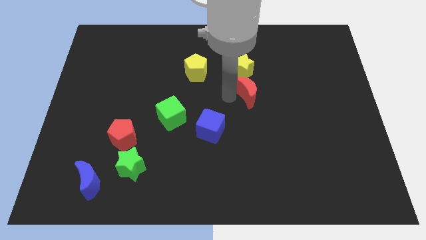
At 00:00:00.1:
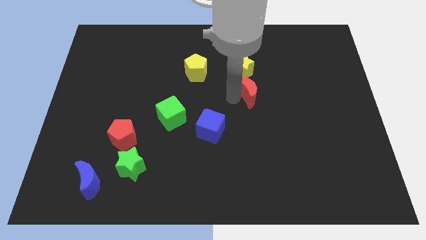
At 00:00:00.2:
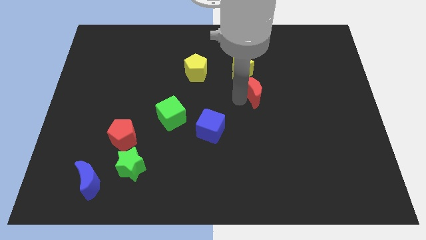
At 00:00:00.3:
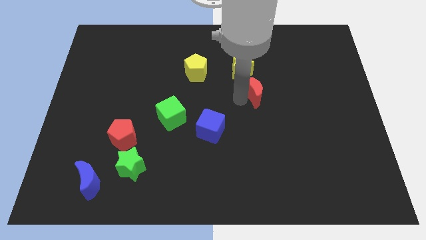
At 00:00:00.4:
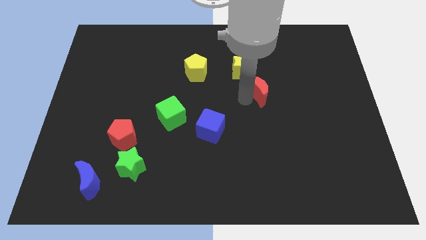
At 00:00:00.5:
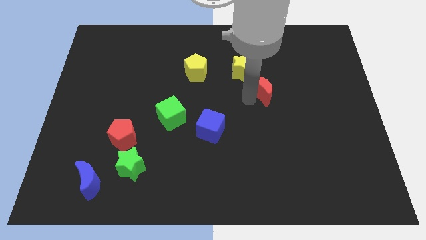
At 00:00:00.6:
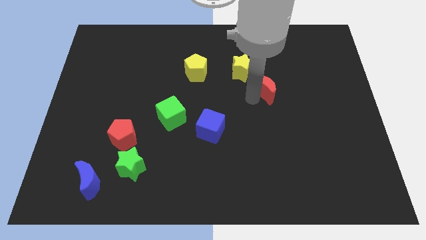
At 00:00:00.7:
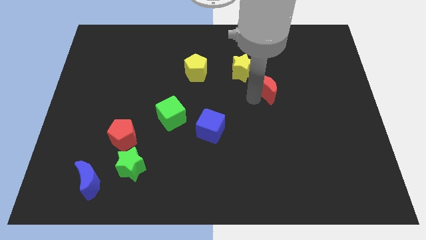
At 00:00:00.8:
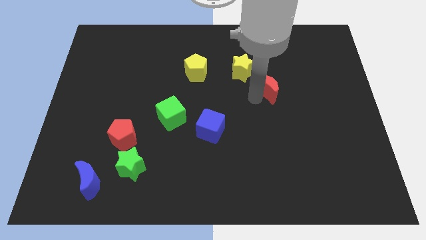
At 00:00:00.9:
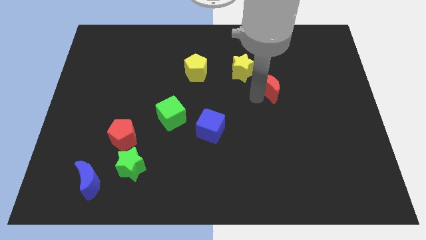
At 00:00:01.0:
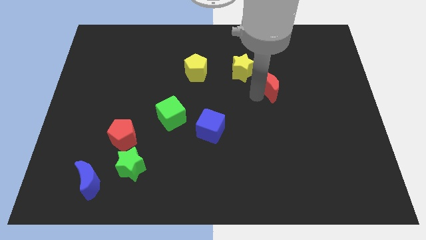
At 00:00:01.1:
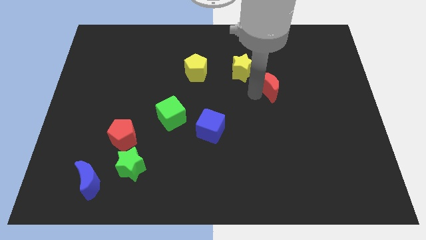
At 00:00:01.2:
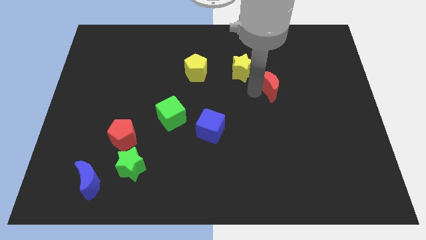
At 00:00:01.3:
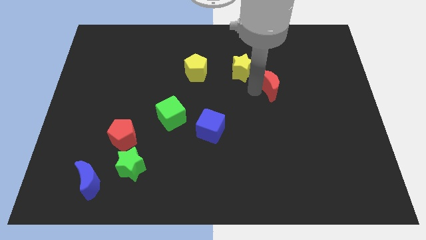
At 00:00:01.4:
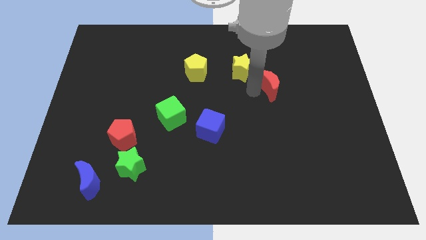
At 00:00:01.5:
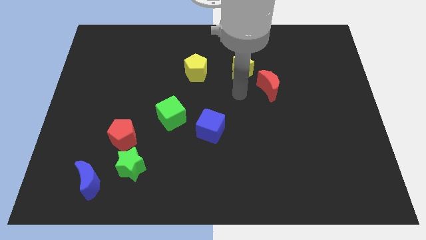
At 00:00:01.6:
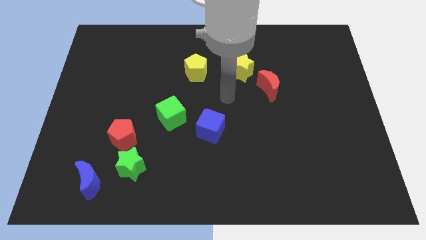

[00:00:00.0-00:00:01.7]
put the red moon at the bottom right side of the yellow star

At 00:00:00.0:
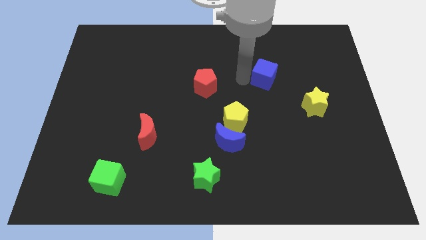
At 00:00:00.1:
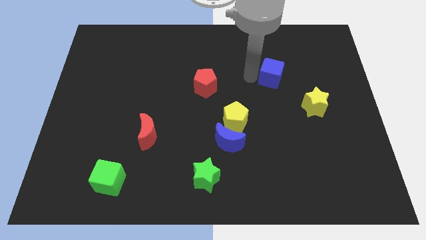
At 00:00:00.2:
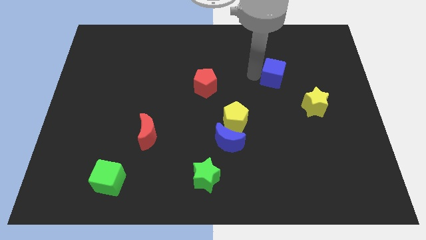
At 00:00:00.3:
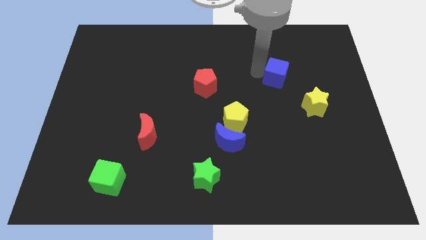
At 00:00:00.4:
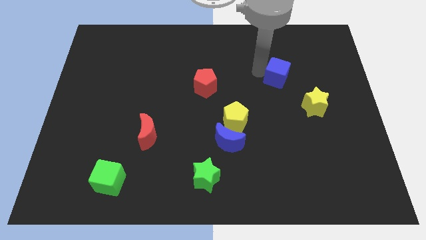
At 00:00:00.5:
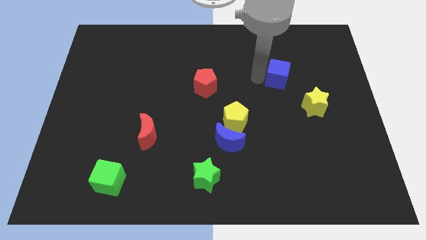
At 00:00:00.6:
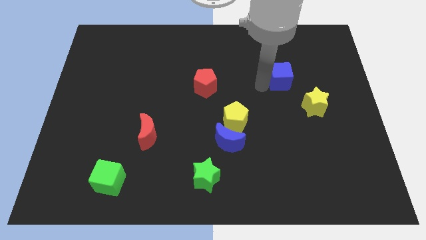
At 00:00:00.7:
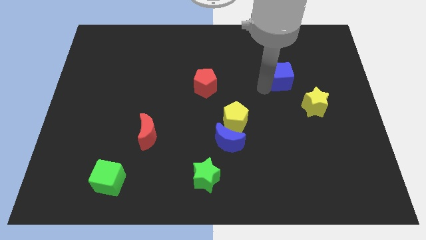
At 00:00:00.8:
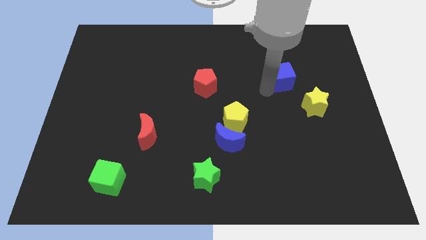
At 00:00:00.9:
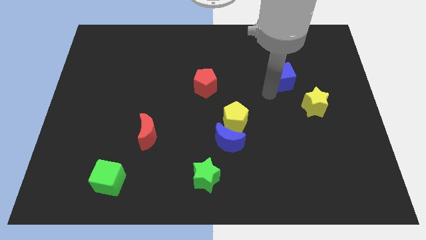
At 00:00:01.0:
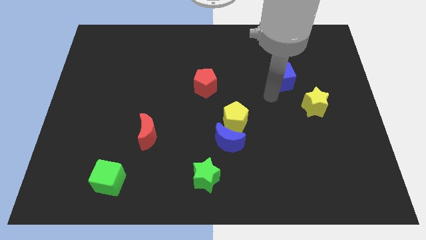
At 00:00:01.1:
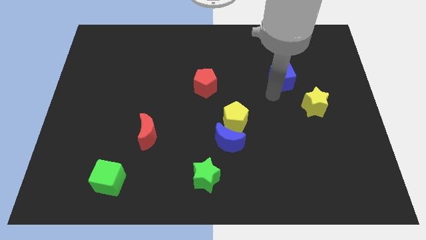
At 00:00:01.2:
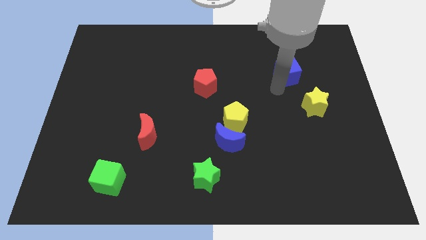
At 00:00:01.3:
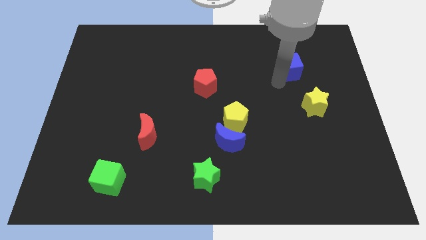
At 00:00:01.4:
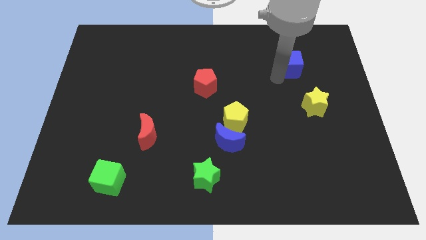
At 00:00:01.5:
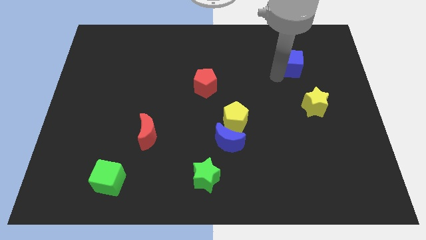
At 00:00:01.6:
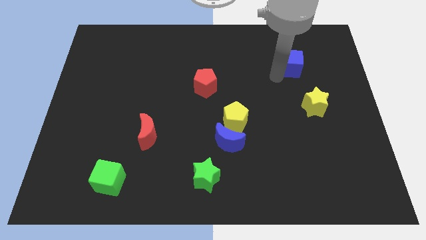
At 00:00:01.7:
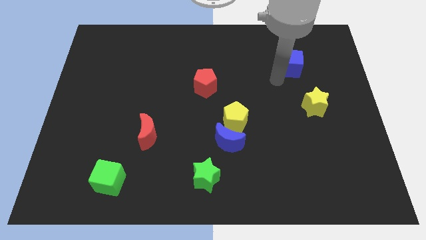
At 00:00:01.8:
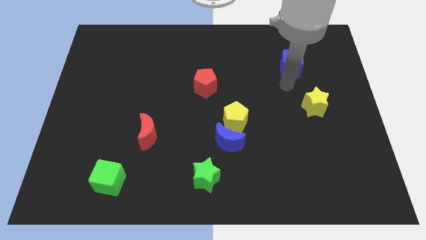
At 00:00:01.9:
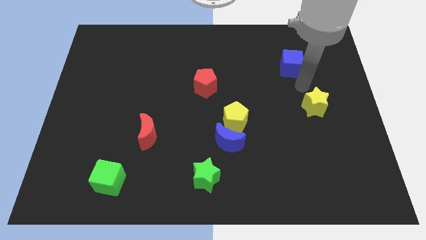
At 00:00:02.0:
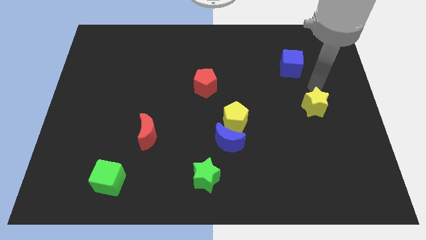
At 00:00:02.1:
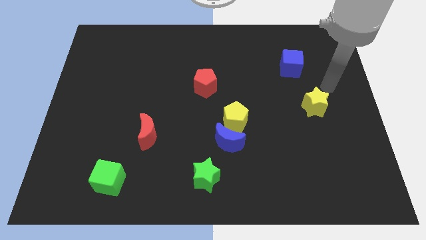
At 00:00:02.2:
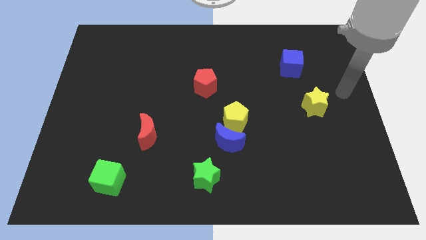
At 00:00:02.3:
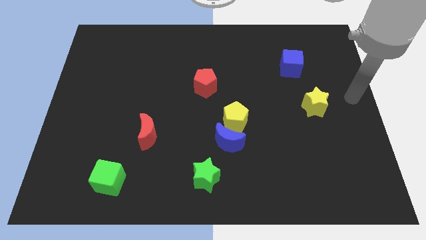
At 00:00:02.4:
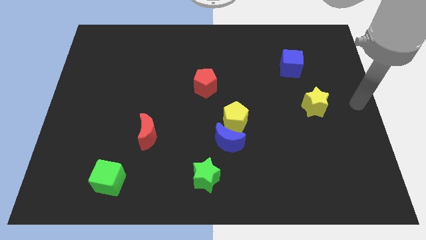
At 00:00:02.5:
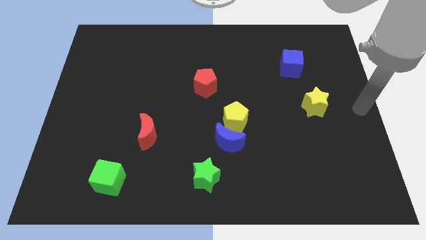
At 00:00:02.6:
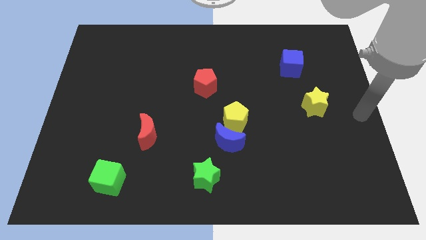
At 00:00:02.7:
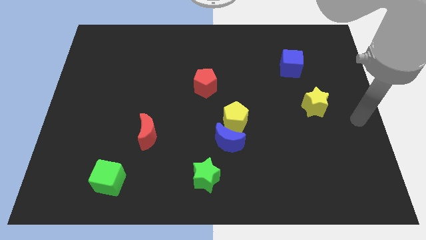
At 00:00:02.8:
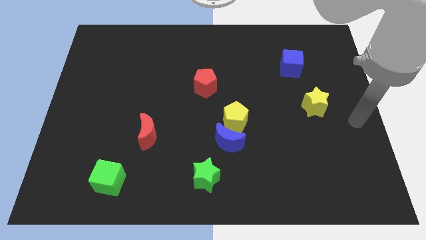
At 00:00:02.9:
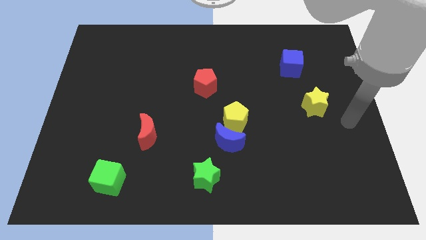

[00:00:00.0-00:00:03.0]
place the blue cube to the top left of the yellow star

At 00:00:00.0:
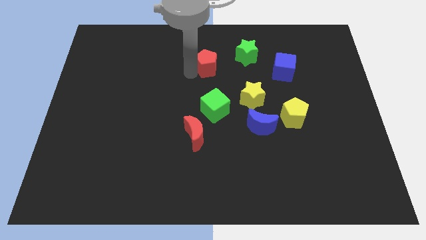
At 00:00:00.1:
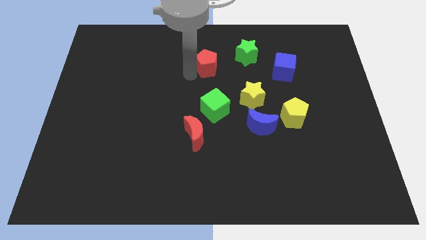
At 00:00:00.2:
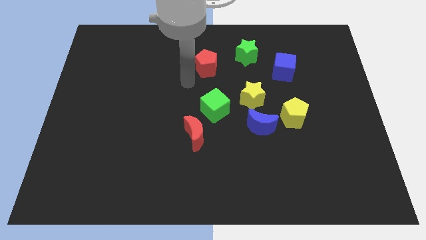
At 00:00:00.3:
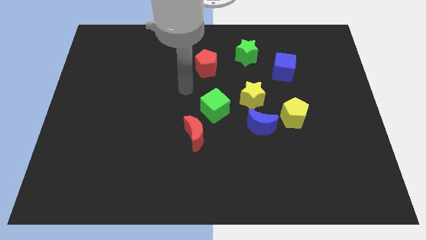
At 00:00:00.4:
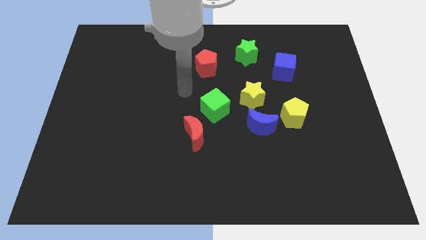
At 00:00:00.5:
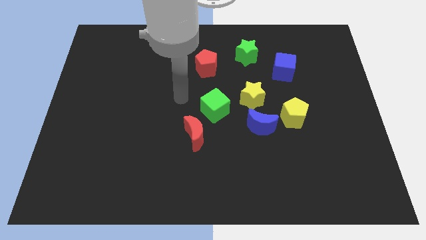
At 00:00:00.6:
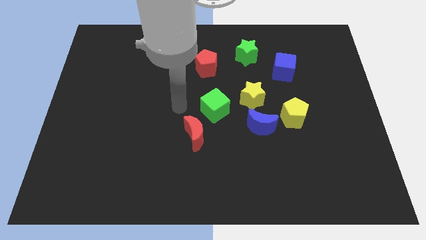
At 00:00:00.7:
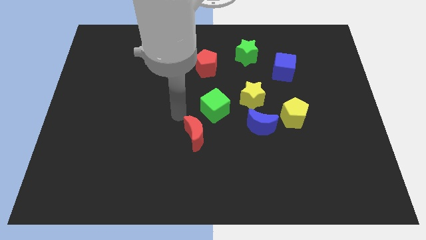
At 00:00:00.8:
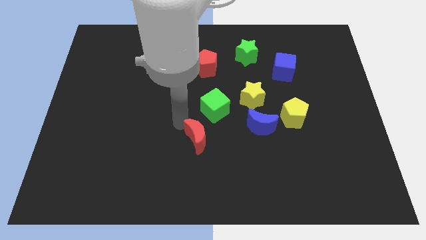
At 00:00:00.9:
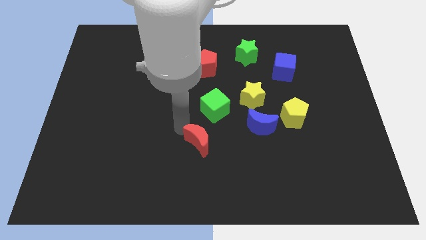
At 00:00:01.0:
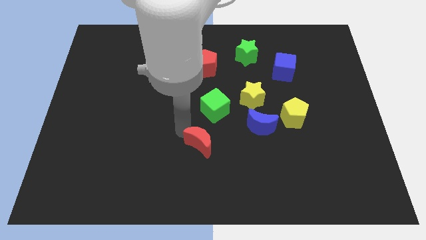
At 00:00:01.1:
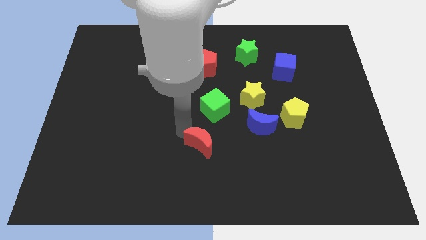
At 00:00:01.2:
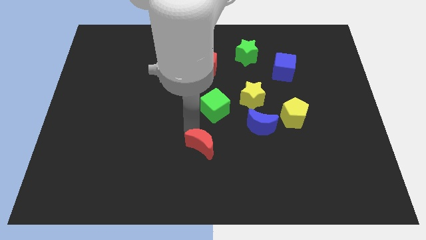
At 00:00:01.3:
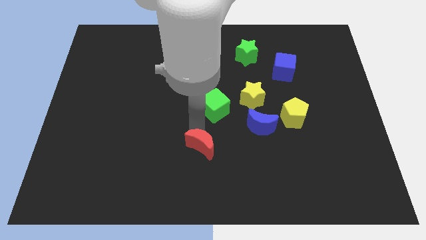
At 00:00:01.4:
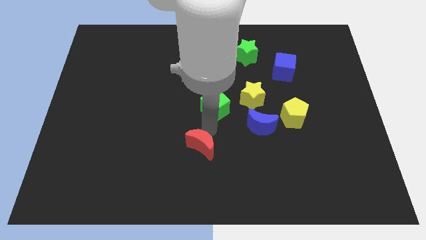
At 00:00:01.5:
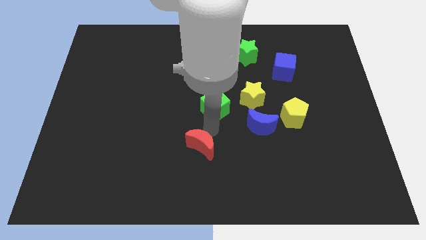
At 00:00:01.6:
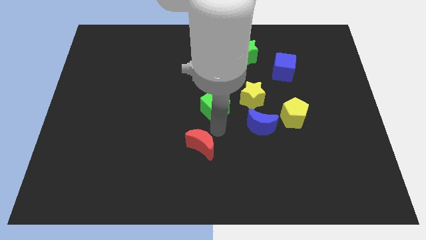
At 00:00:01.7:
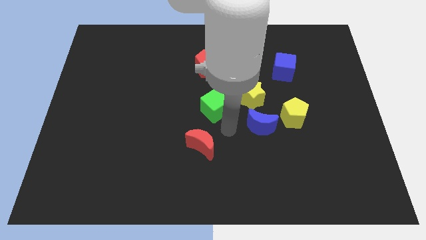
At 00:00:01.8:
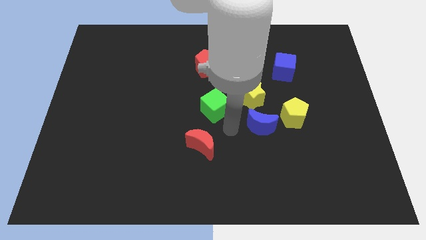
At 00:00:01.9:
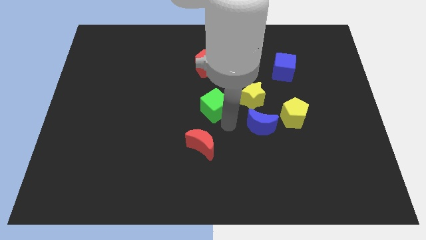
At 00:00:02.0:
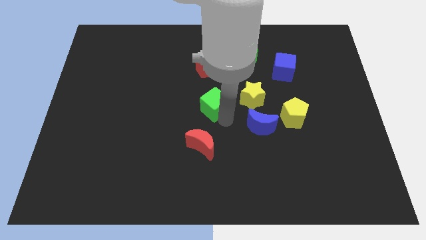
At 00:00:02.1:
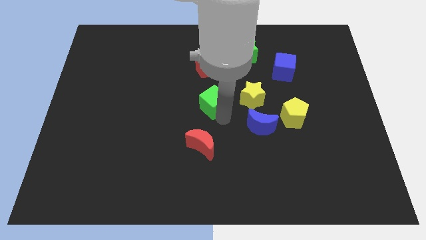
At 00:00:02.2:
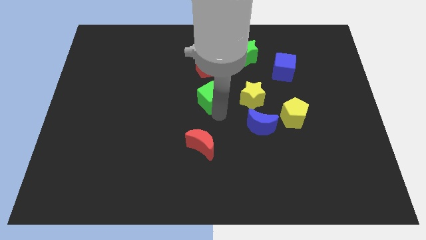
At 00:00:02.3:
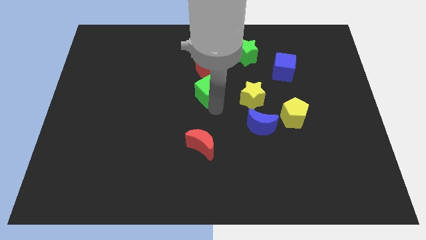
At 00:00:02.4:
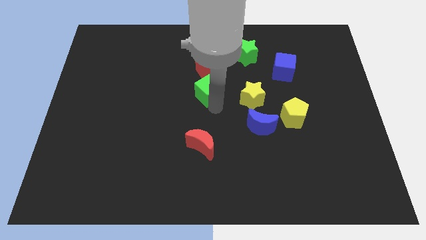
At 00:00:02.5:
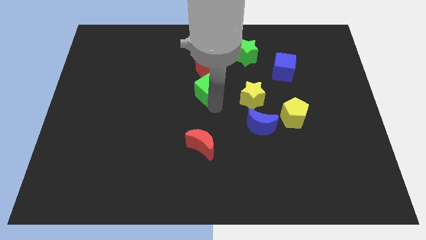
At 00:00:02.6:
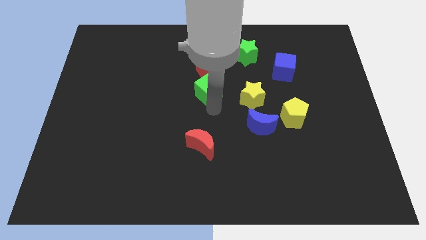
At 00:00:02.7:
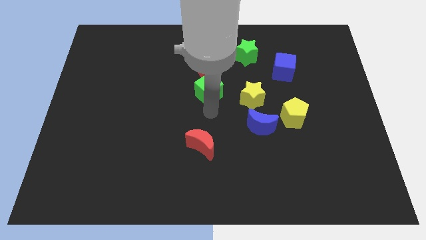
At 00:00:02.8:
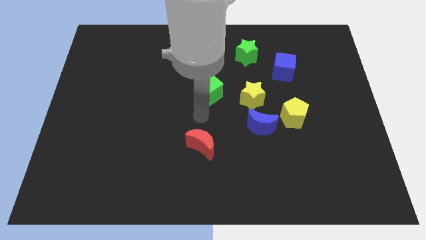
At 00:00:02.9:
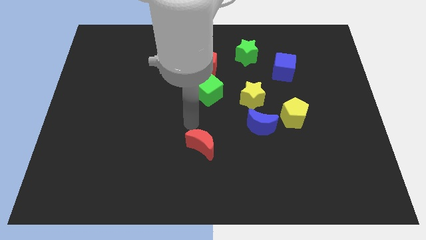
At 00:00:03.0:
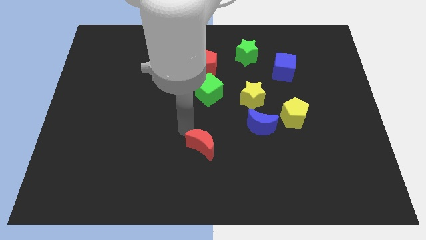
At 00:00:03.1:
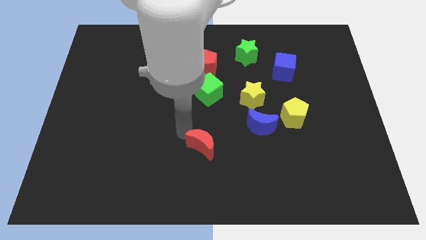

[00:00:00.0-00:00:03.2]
push the green cube into the red pentagon

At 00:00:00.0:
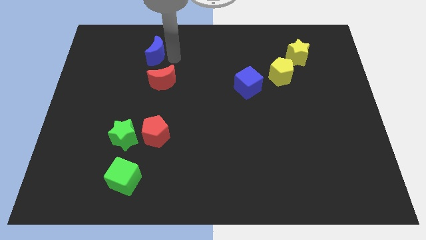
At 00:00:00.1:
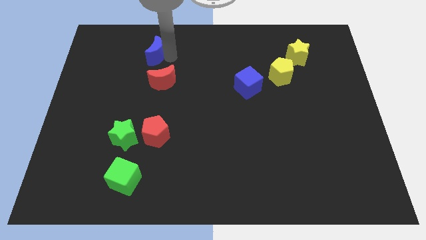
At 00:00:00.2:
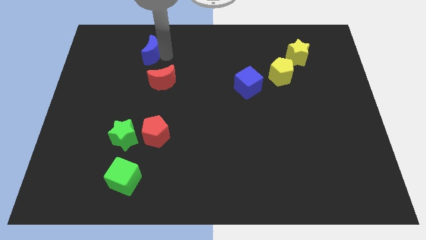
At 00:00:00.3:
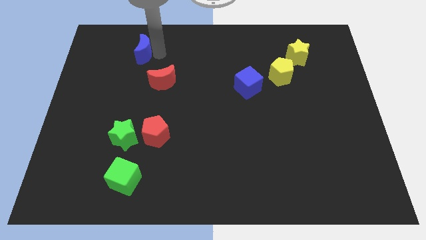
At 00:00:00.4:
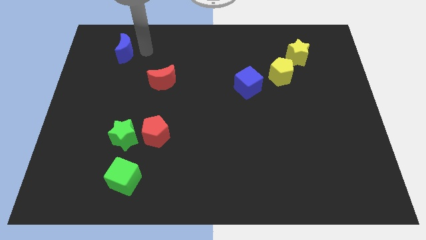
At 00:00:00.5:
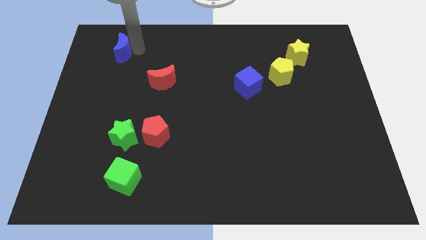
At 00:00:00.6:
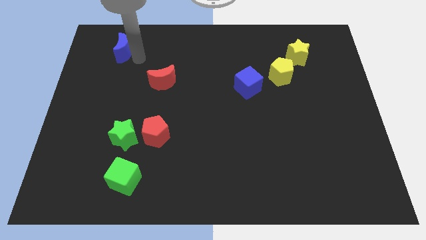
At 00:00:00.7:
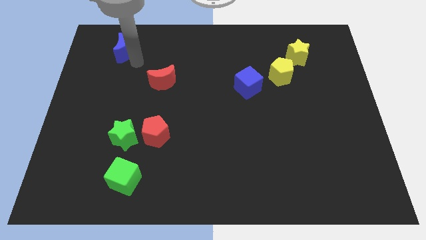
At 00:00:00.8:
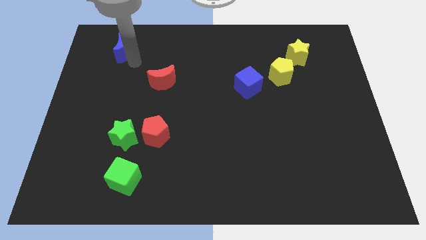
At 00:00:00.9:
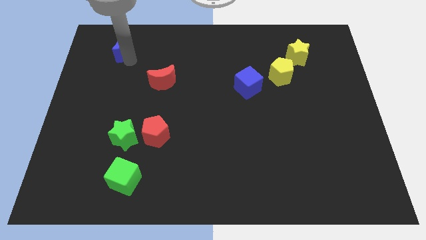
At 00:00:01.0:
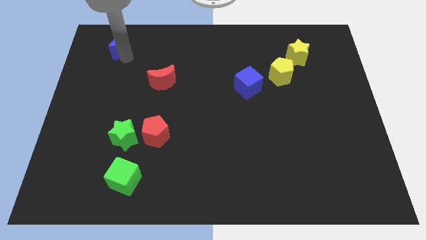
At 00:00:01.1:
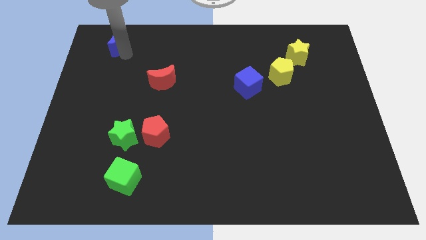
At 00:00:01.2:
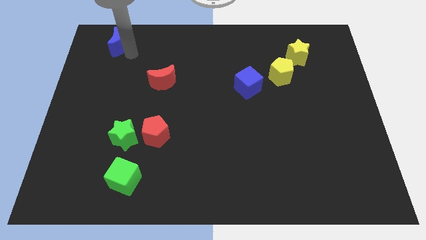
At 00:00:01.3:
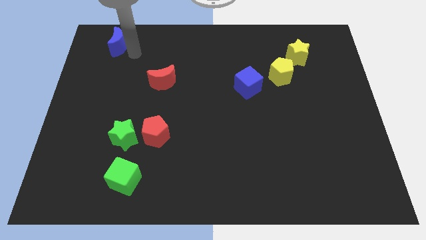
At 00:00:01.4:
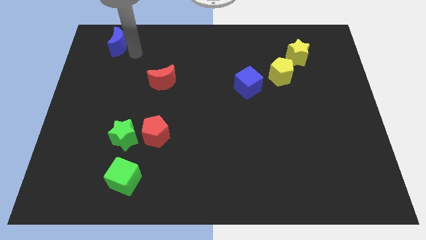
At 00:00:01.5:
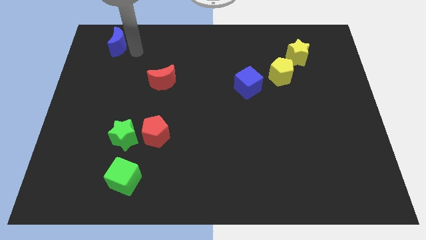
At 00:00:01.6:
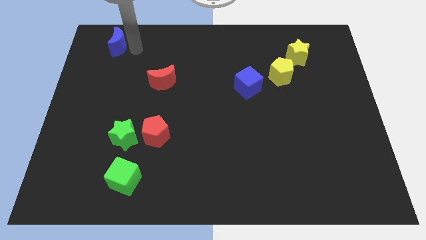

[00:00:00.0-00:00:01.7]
move the blue crescent towards the top left of the board
